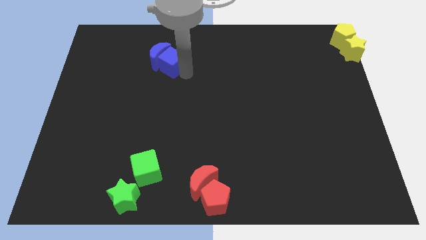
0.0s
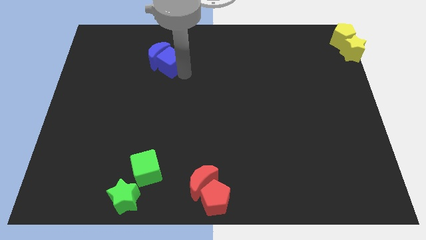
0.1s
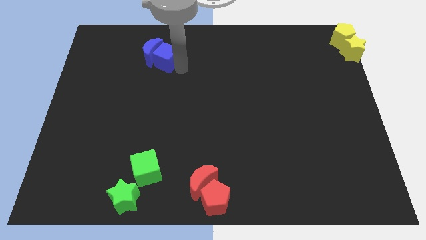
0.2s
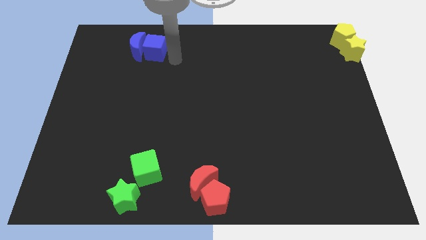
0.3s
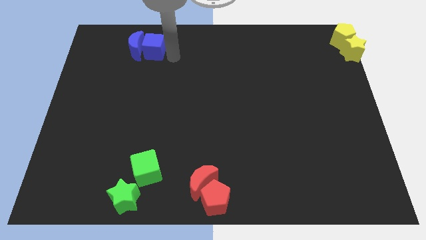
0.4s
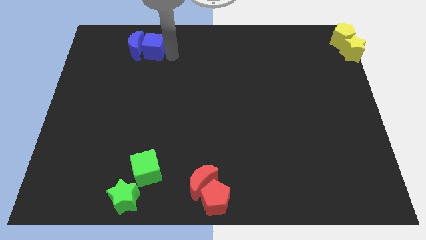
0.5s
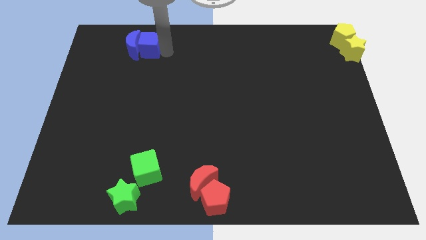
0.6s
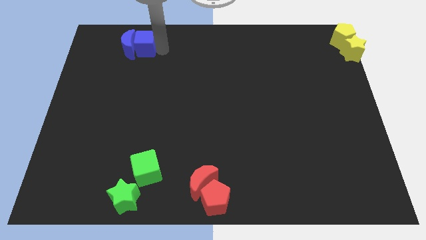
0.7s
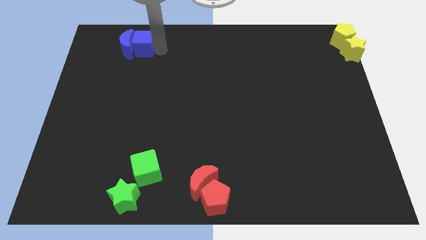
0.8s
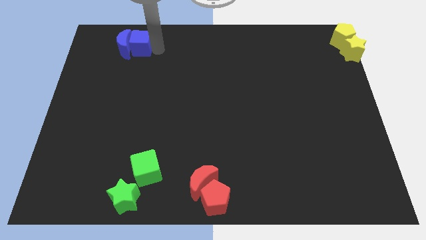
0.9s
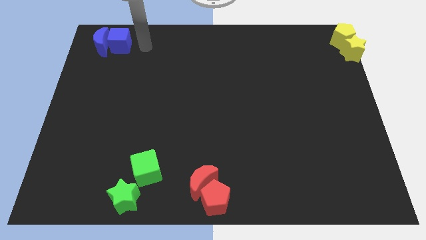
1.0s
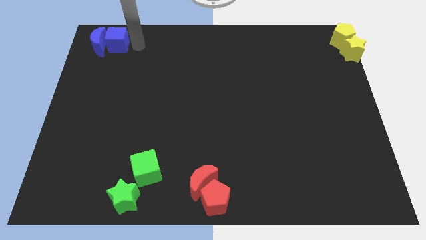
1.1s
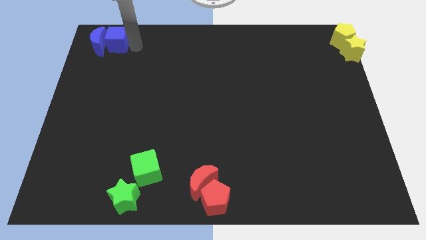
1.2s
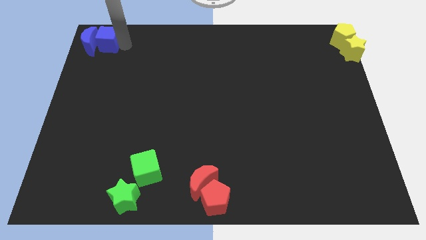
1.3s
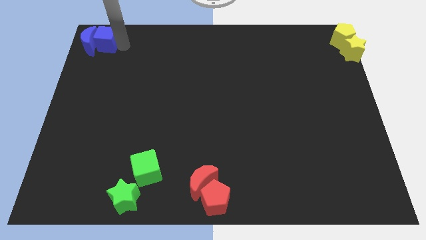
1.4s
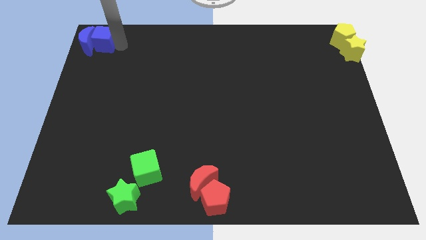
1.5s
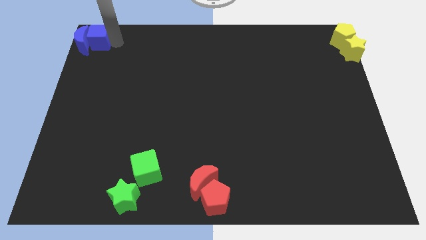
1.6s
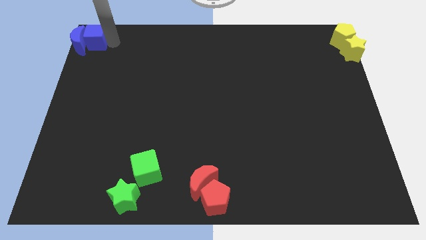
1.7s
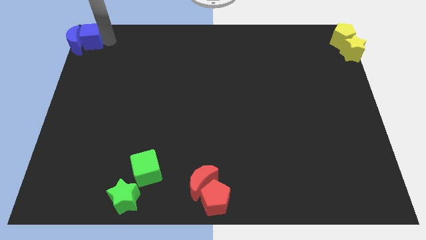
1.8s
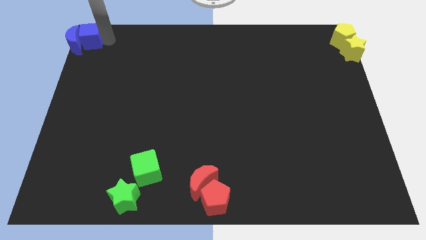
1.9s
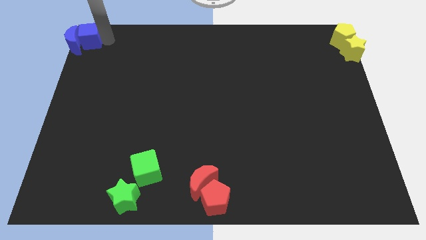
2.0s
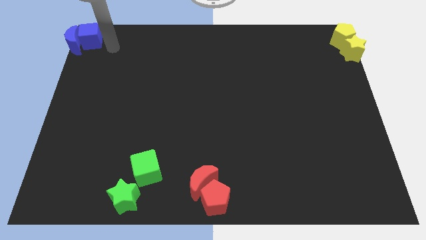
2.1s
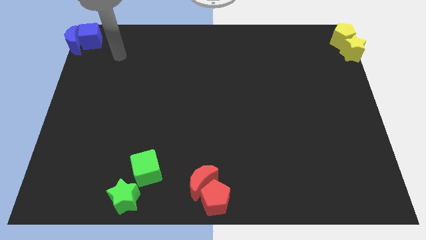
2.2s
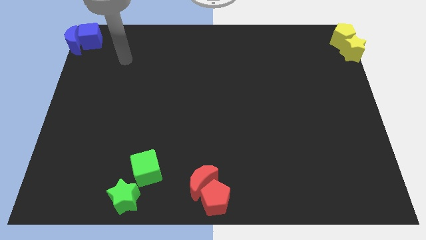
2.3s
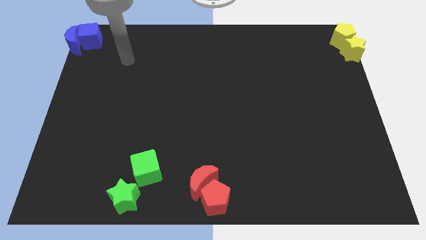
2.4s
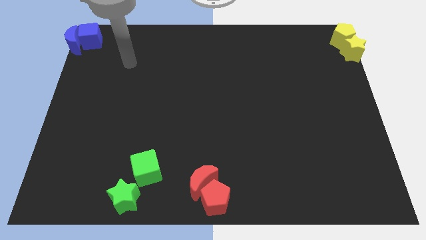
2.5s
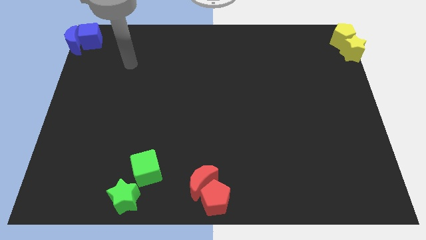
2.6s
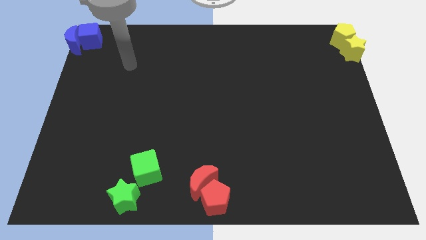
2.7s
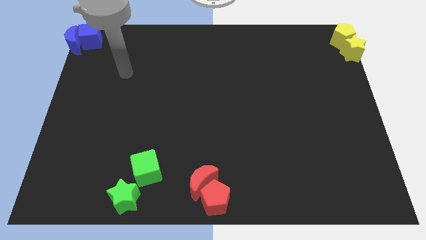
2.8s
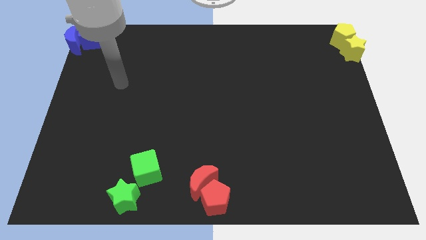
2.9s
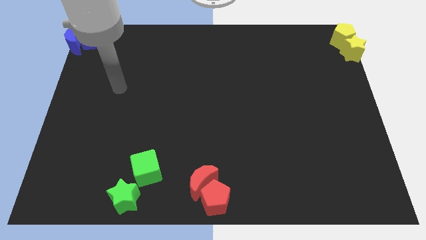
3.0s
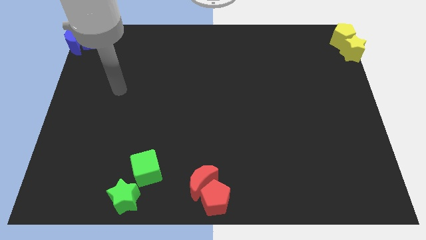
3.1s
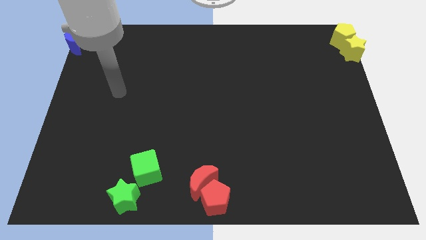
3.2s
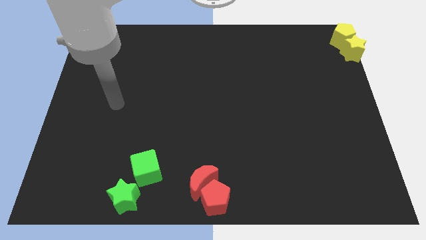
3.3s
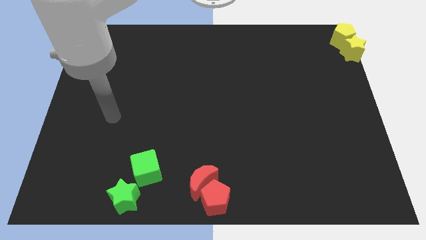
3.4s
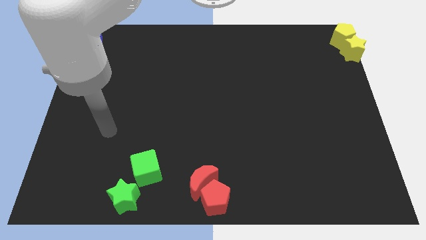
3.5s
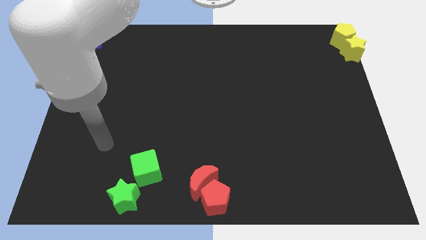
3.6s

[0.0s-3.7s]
push the blue blocks towards the top left corner of the board

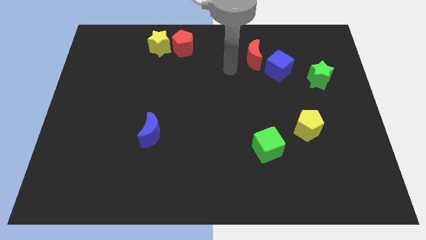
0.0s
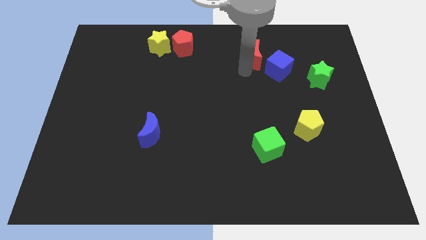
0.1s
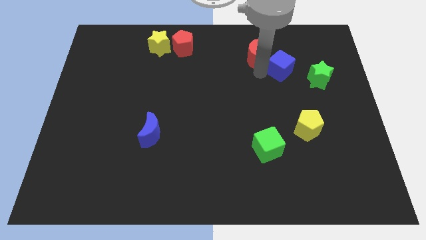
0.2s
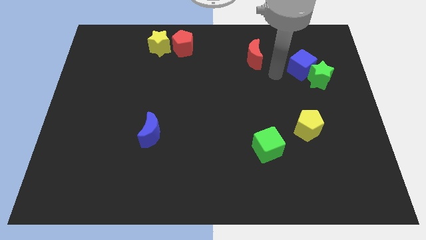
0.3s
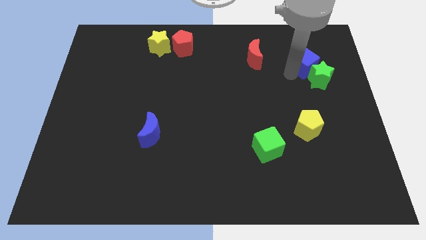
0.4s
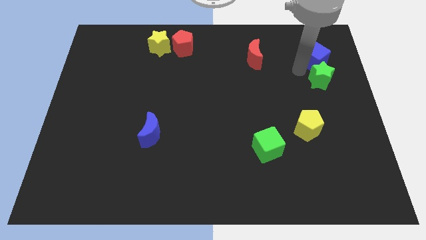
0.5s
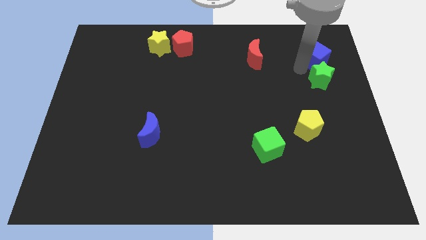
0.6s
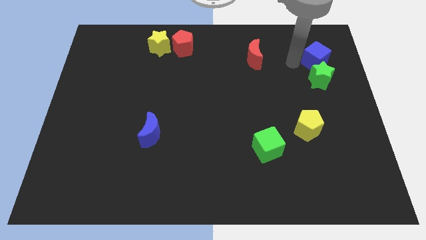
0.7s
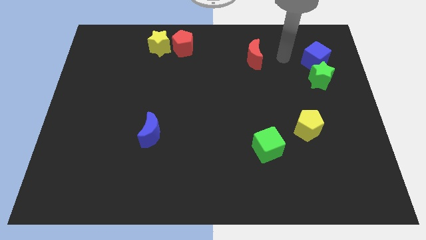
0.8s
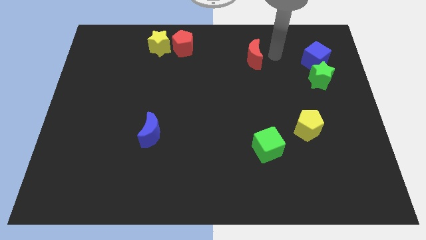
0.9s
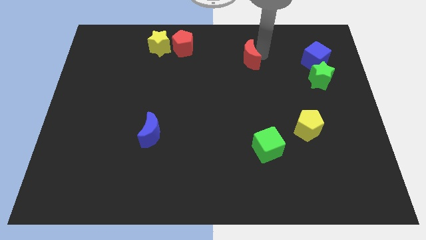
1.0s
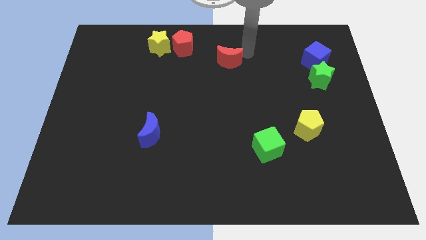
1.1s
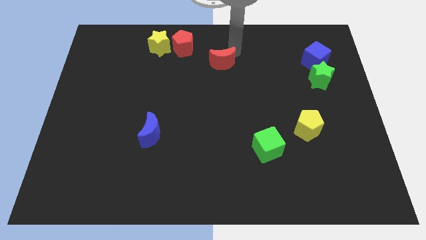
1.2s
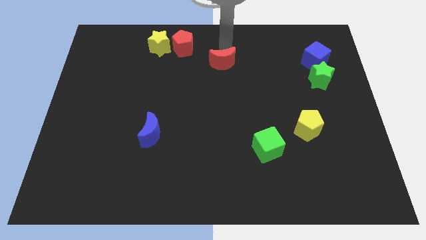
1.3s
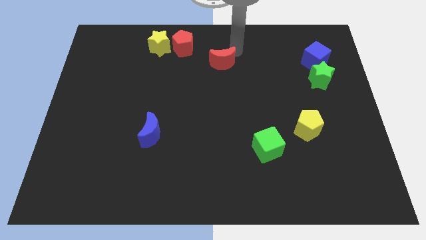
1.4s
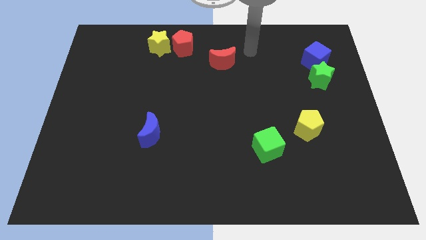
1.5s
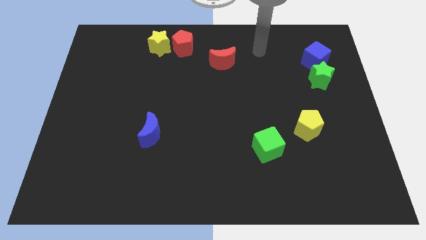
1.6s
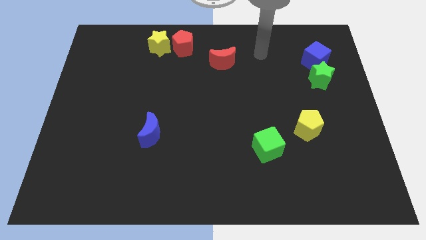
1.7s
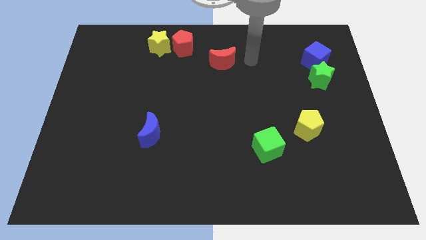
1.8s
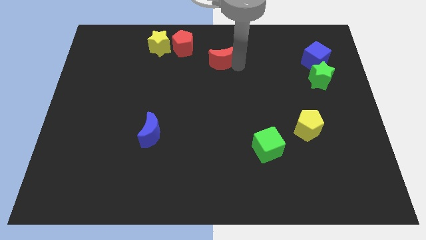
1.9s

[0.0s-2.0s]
move the blue cube above the green star

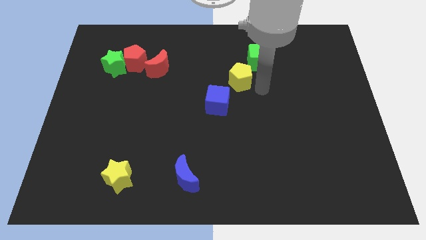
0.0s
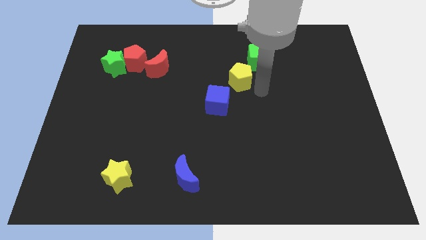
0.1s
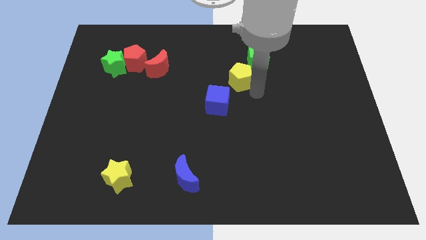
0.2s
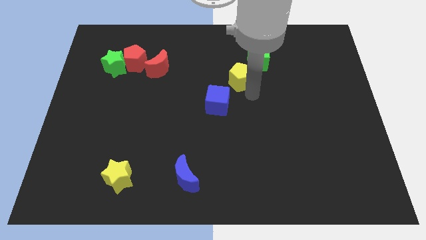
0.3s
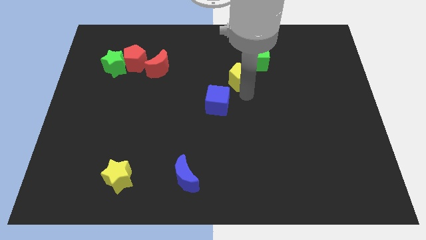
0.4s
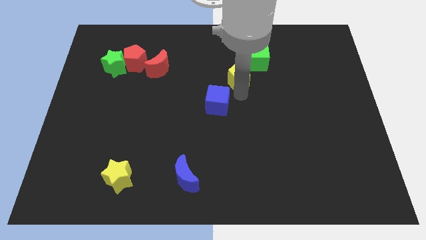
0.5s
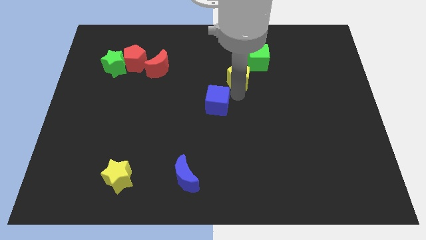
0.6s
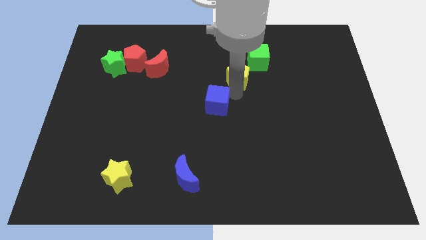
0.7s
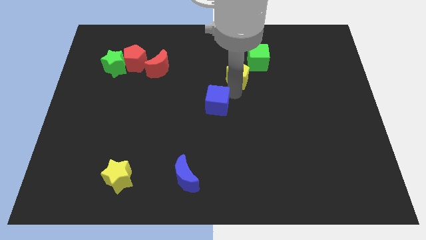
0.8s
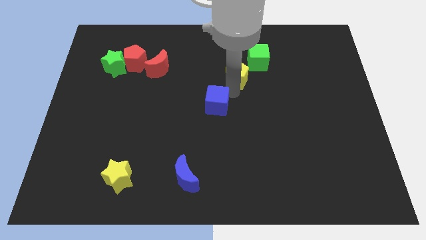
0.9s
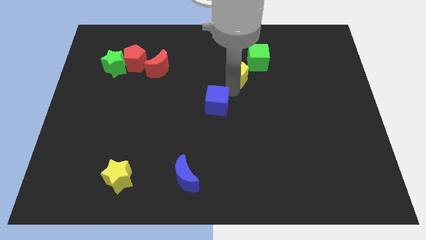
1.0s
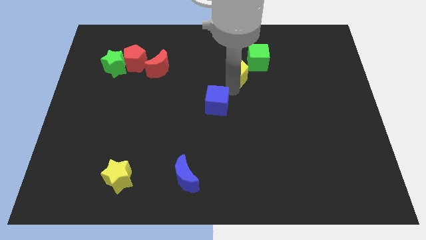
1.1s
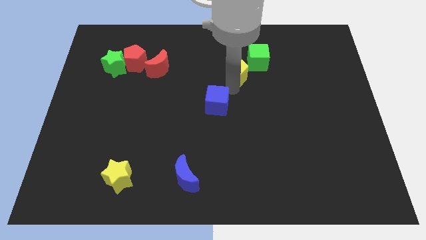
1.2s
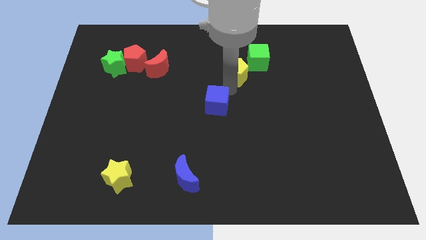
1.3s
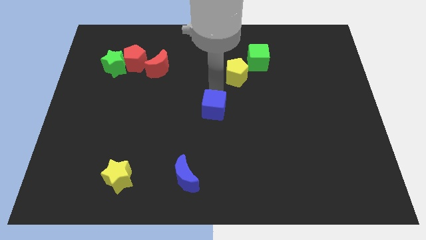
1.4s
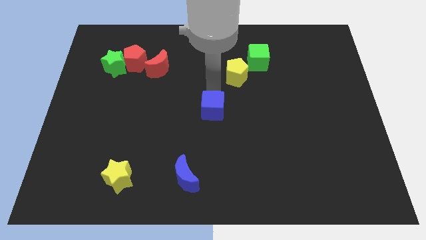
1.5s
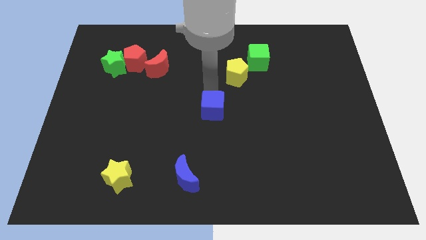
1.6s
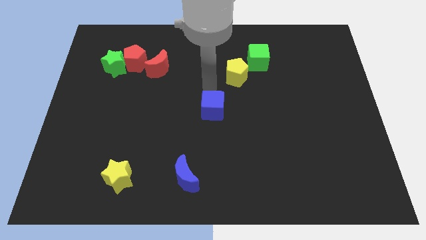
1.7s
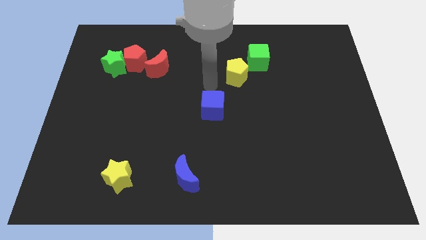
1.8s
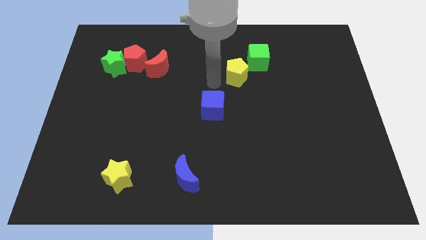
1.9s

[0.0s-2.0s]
push blue cube and yellow pentagon apart

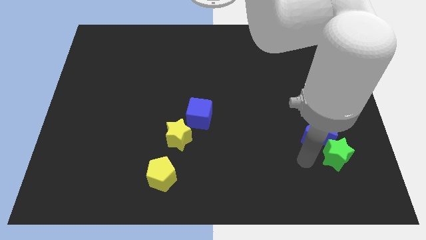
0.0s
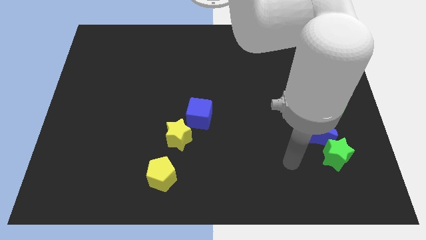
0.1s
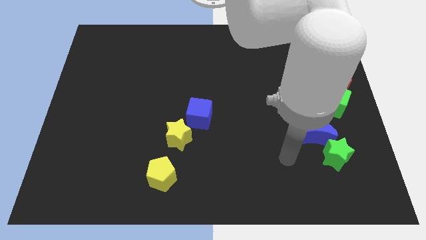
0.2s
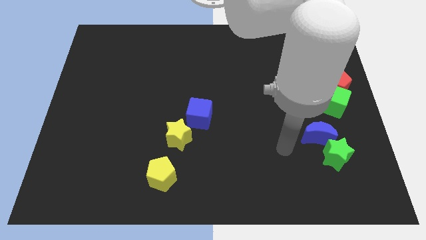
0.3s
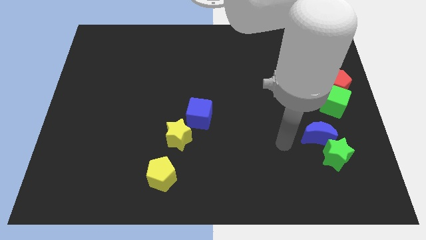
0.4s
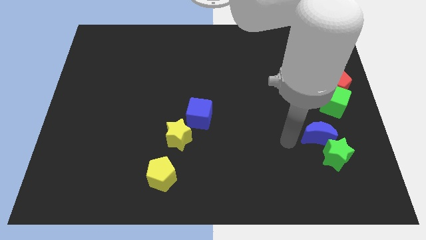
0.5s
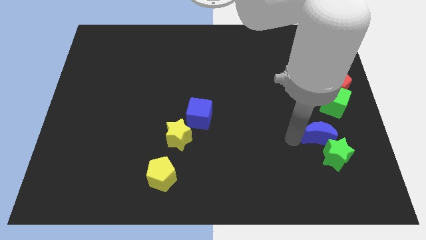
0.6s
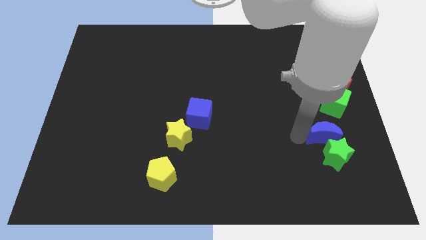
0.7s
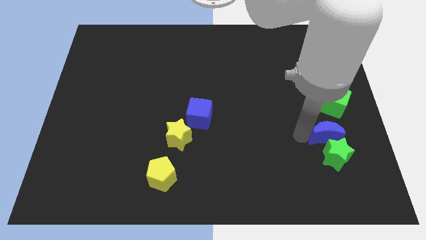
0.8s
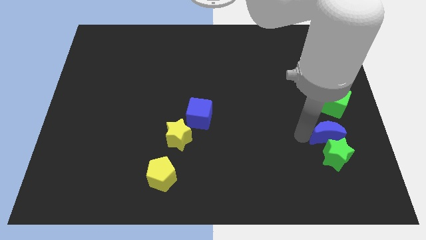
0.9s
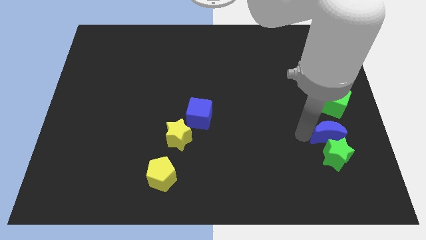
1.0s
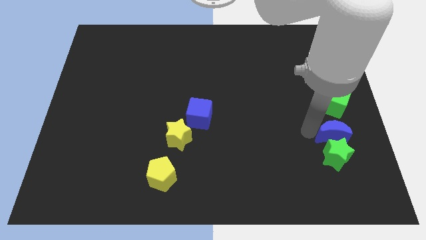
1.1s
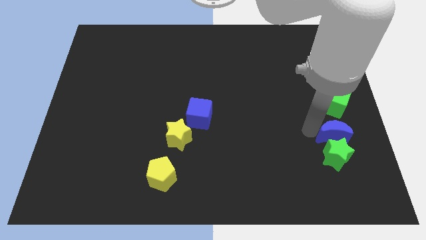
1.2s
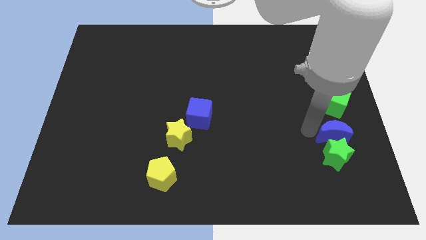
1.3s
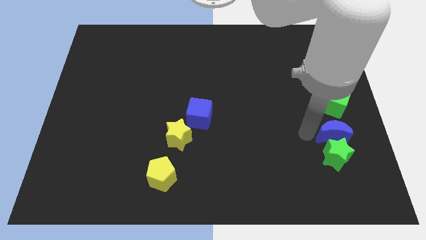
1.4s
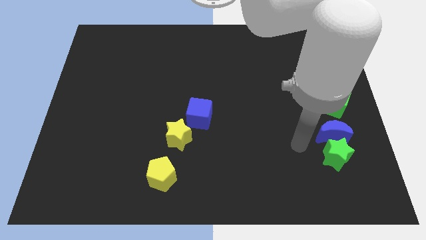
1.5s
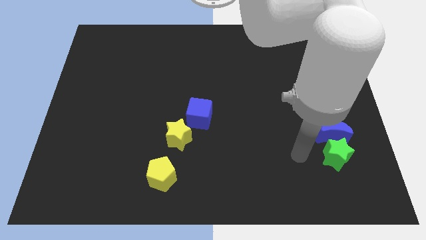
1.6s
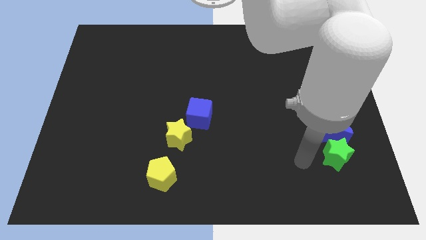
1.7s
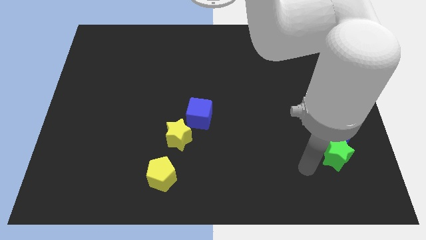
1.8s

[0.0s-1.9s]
place the blue moon in between the green blocks
